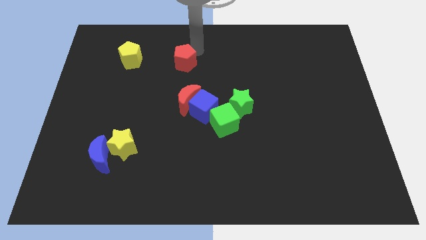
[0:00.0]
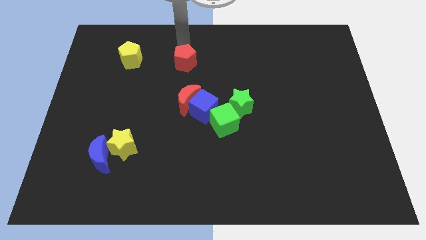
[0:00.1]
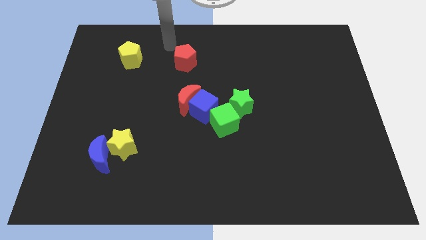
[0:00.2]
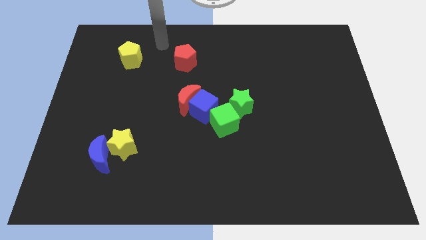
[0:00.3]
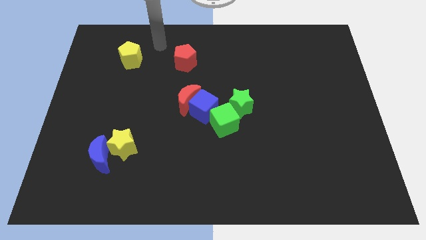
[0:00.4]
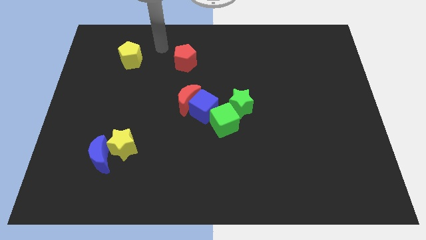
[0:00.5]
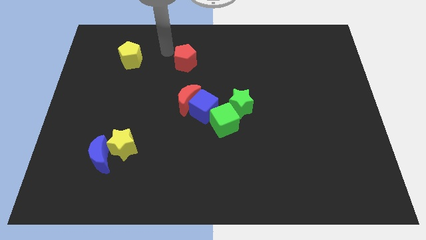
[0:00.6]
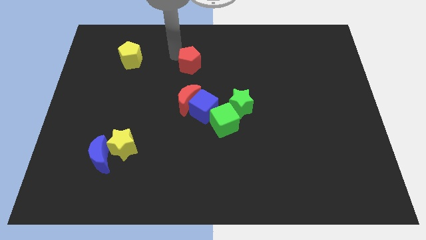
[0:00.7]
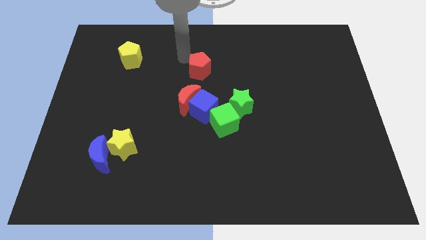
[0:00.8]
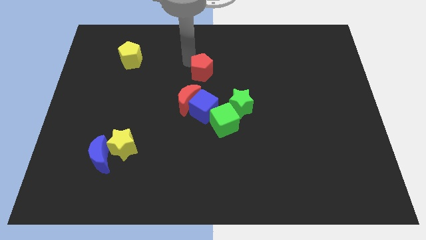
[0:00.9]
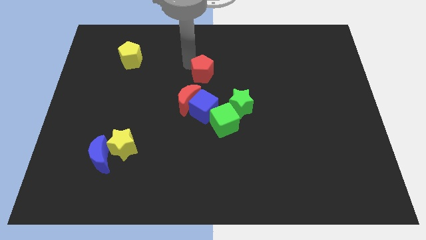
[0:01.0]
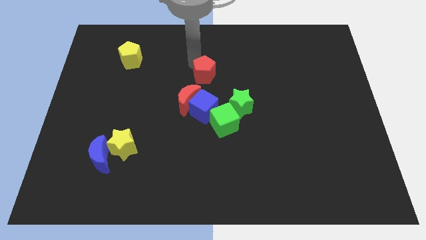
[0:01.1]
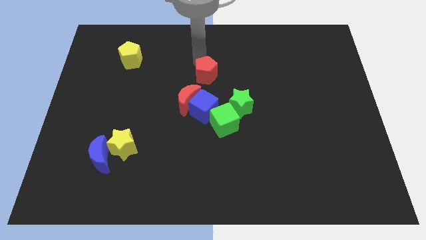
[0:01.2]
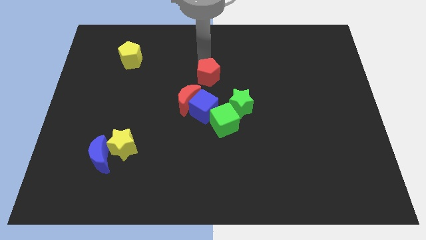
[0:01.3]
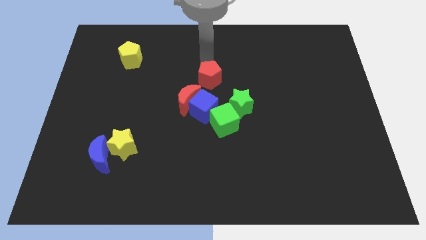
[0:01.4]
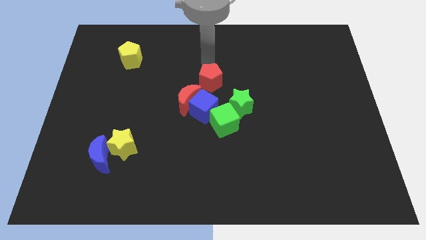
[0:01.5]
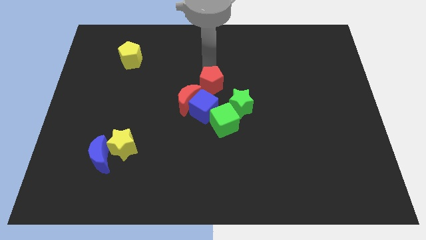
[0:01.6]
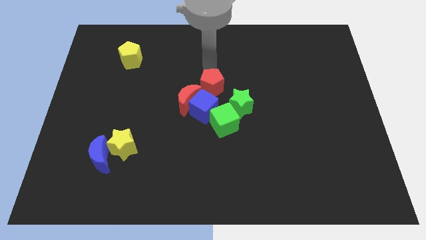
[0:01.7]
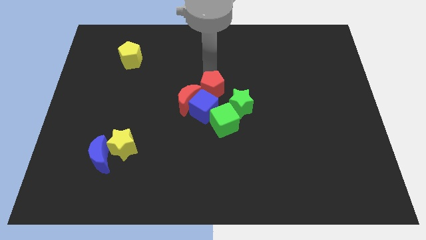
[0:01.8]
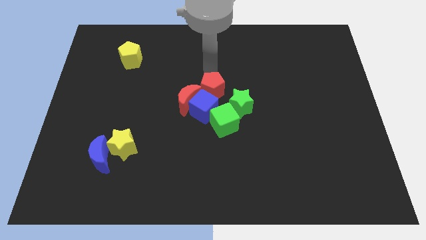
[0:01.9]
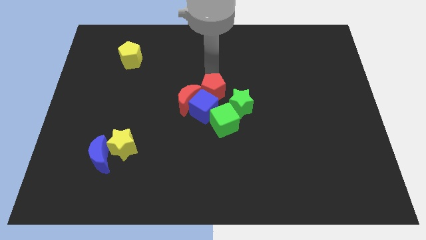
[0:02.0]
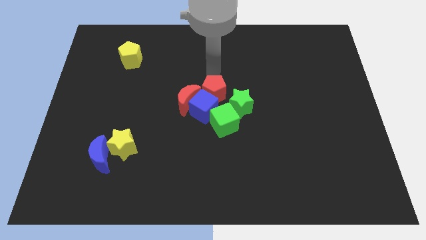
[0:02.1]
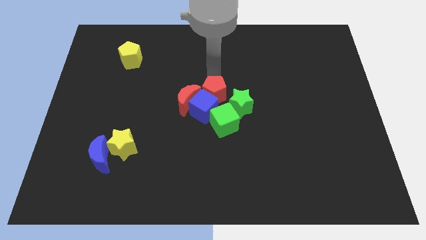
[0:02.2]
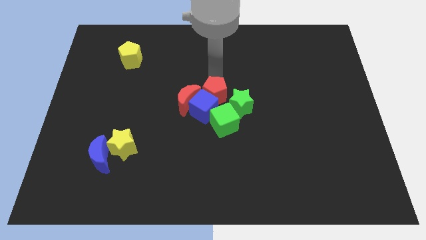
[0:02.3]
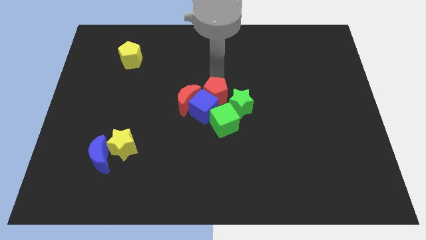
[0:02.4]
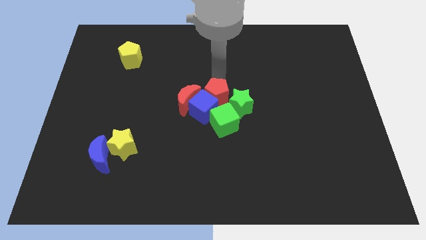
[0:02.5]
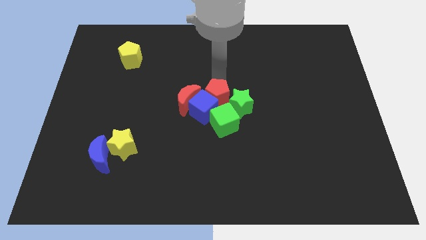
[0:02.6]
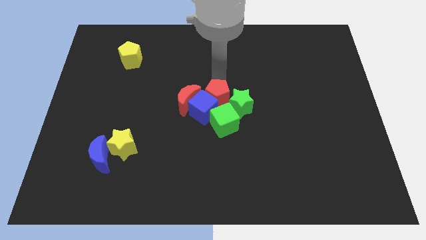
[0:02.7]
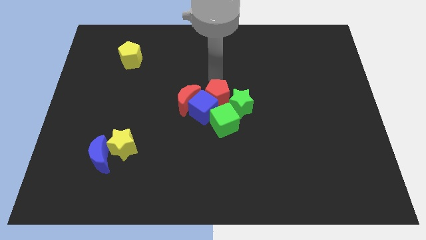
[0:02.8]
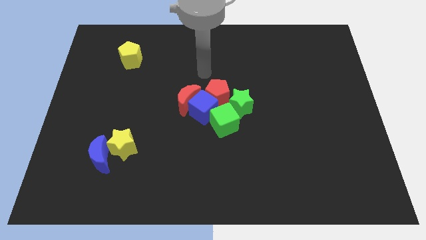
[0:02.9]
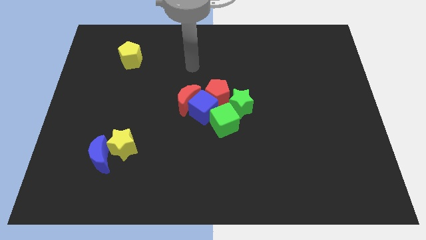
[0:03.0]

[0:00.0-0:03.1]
push the red pentagon into the blue cube

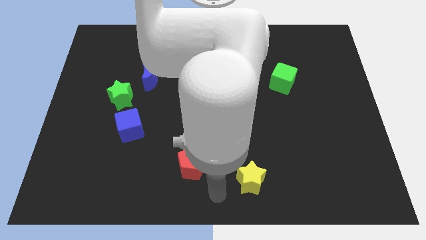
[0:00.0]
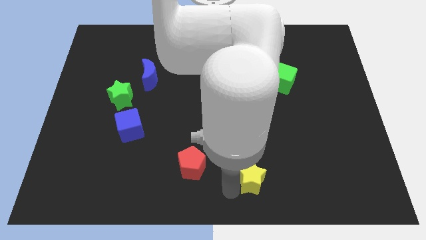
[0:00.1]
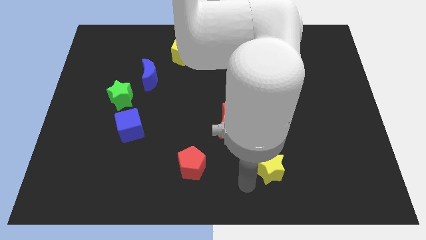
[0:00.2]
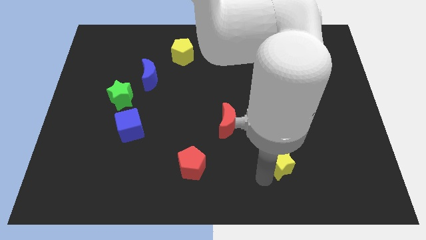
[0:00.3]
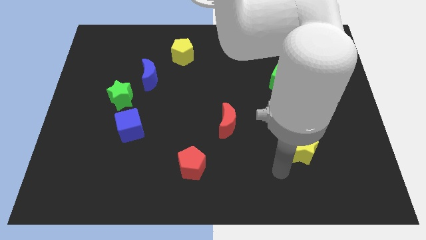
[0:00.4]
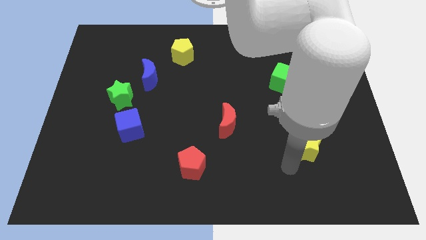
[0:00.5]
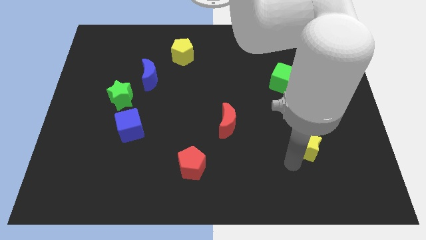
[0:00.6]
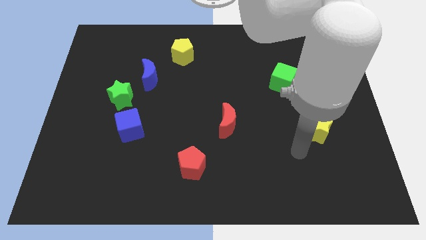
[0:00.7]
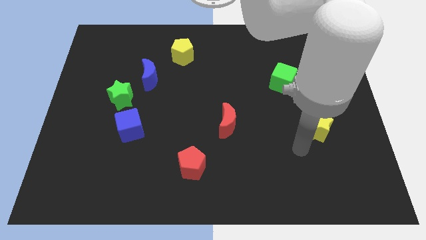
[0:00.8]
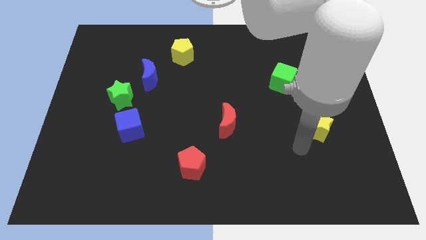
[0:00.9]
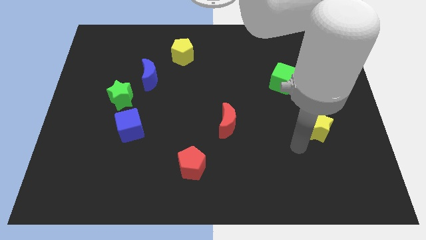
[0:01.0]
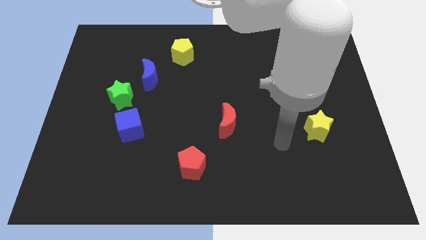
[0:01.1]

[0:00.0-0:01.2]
place the yellow star to the bottom right side of the green cube

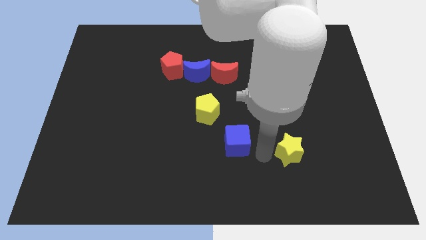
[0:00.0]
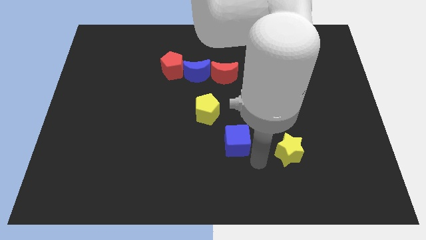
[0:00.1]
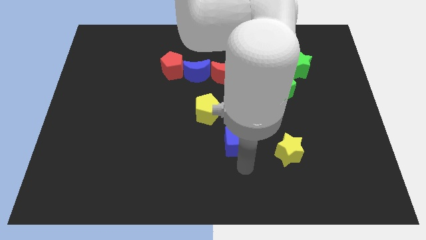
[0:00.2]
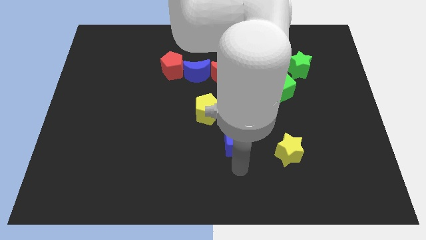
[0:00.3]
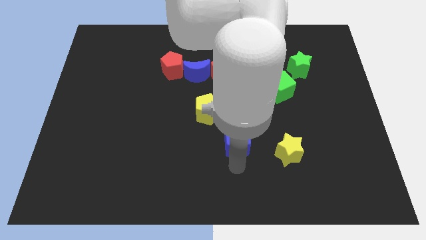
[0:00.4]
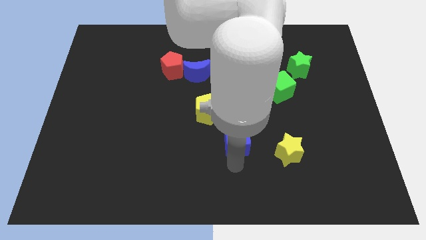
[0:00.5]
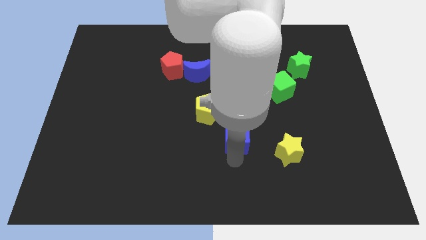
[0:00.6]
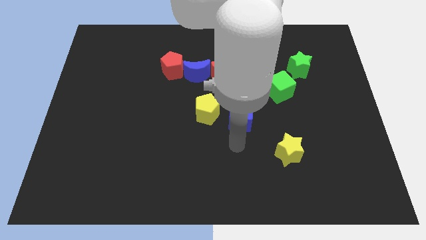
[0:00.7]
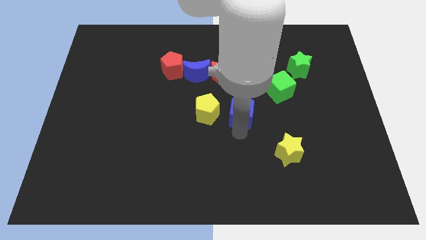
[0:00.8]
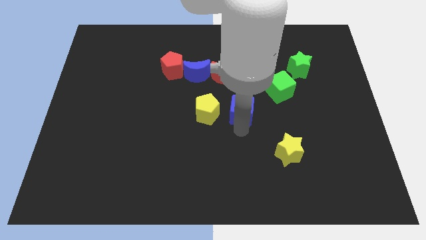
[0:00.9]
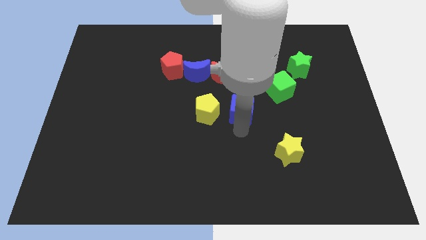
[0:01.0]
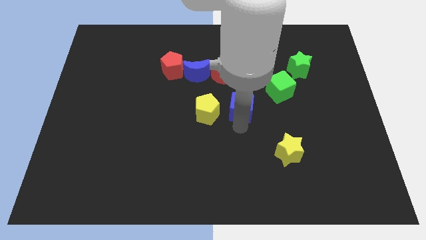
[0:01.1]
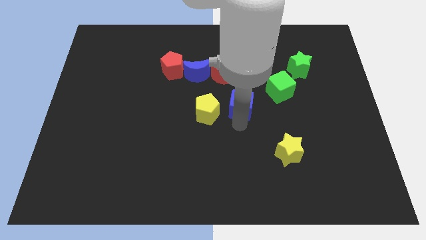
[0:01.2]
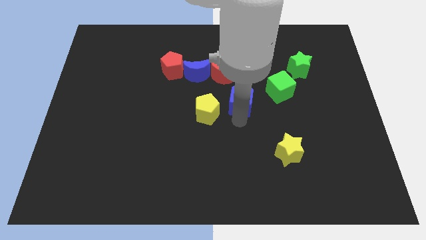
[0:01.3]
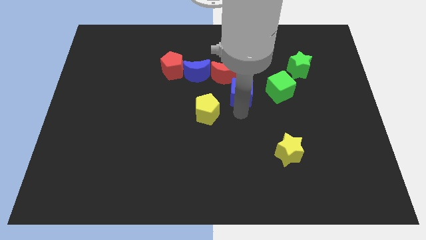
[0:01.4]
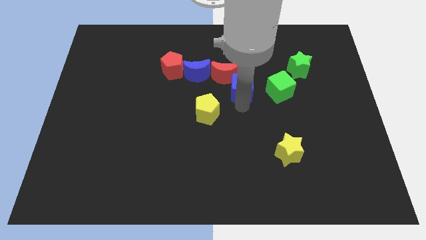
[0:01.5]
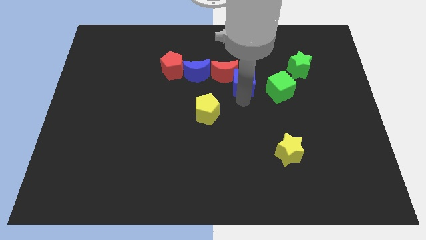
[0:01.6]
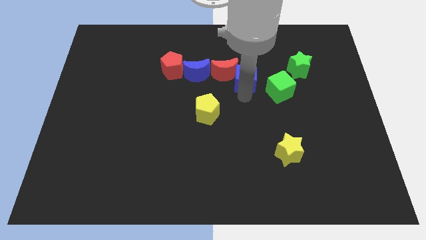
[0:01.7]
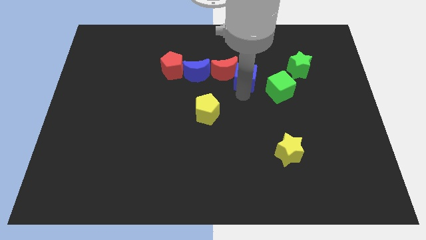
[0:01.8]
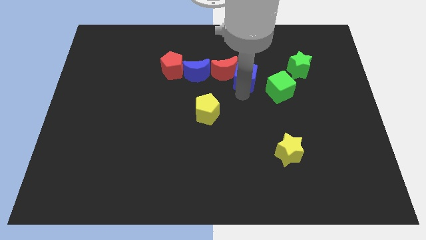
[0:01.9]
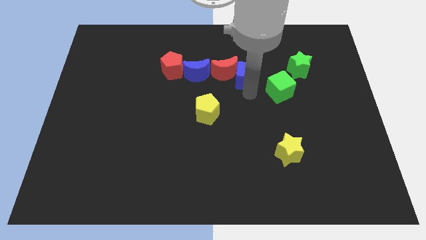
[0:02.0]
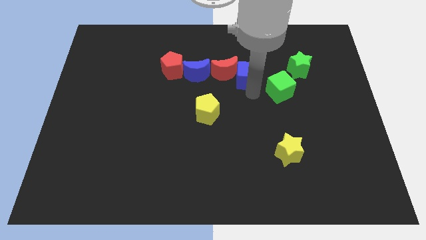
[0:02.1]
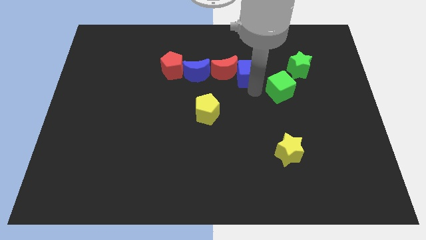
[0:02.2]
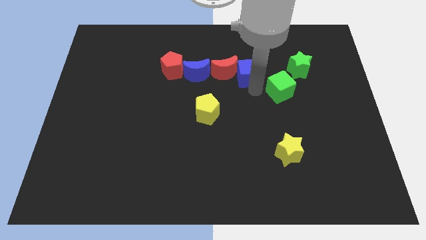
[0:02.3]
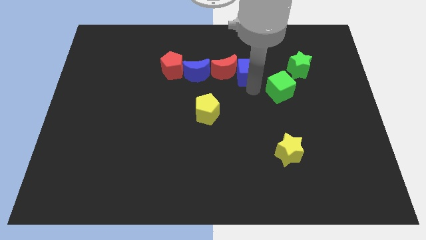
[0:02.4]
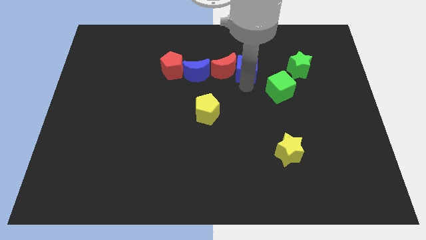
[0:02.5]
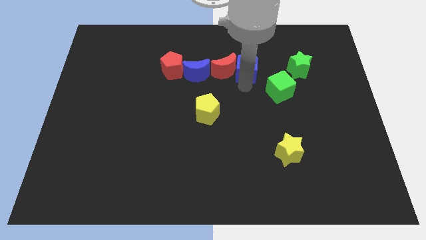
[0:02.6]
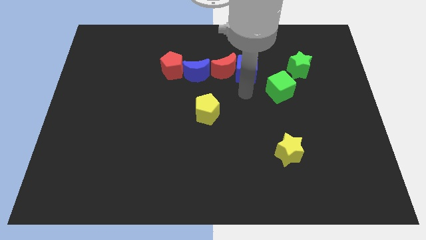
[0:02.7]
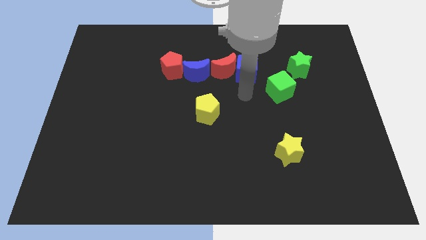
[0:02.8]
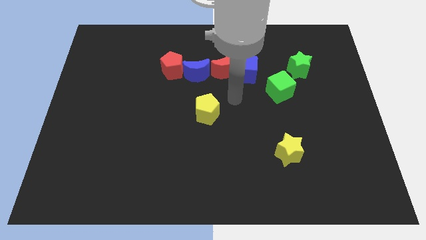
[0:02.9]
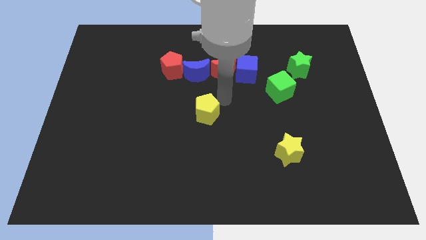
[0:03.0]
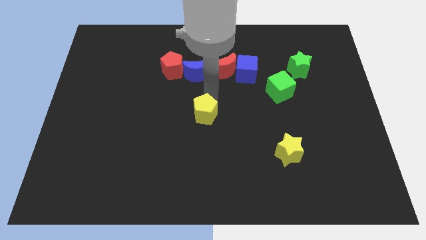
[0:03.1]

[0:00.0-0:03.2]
move the blue cube right to the red crescent

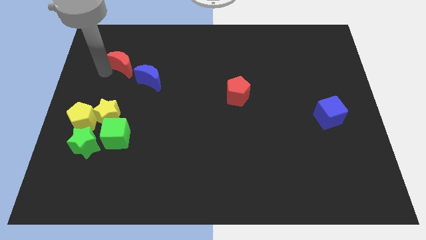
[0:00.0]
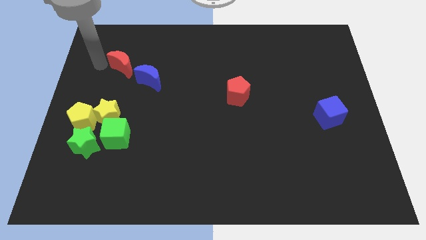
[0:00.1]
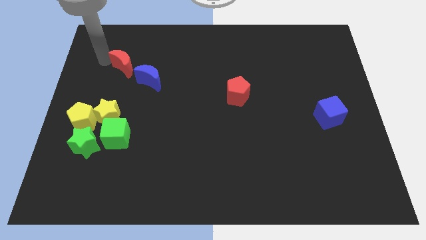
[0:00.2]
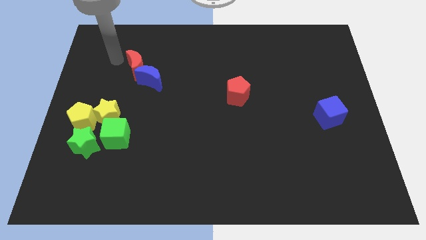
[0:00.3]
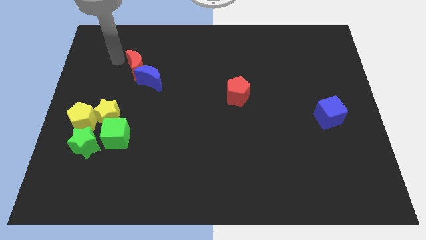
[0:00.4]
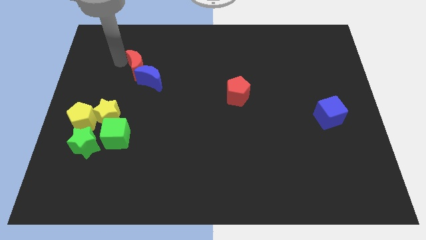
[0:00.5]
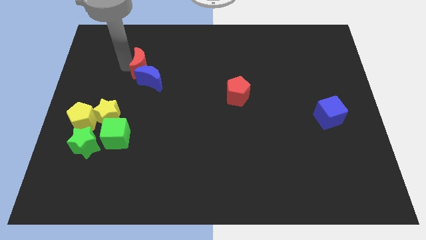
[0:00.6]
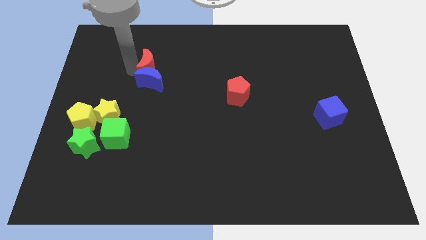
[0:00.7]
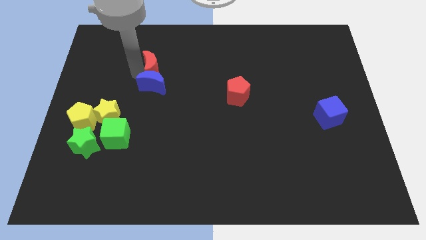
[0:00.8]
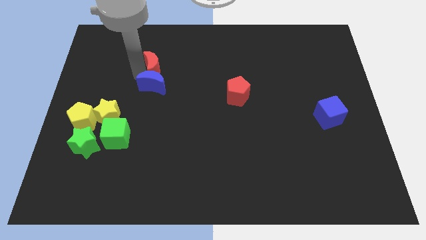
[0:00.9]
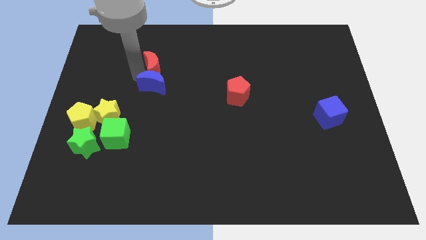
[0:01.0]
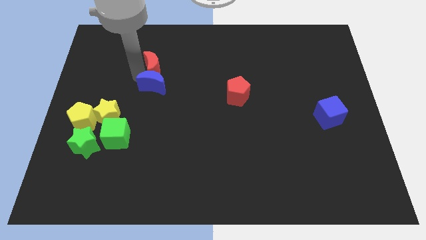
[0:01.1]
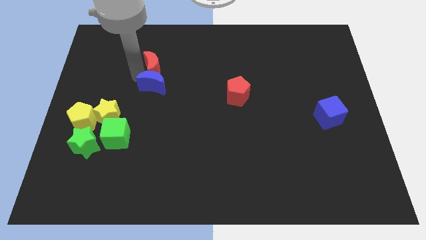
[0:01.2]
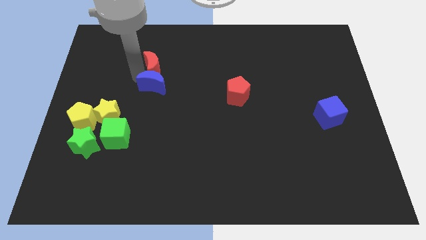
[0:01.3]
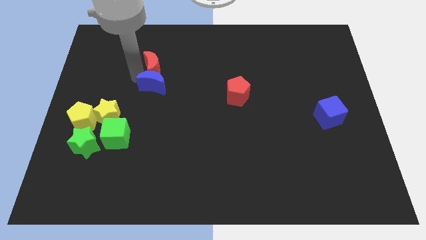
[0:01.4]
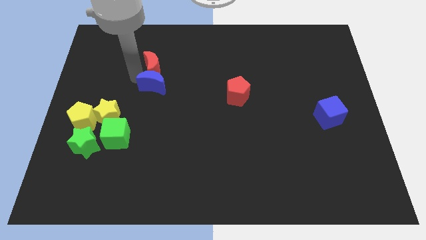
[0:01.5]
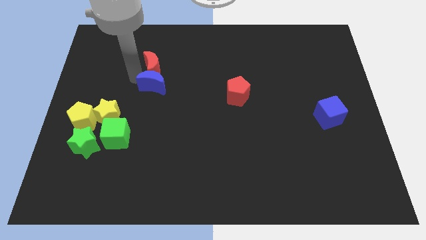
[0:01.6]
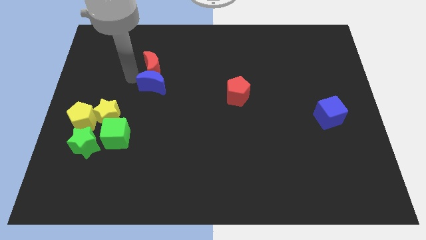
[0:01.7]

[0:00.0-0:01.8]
put the red crescent to the top of the blue crescent
